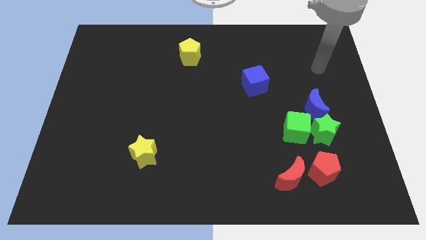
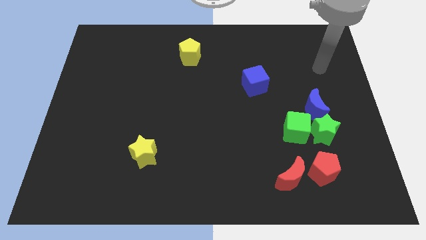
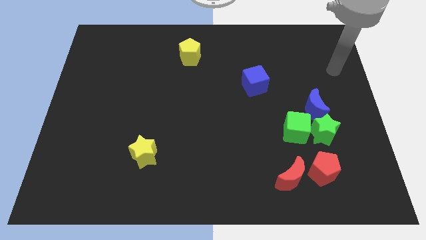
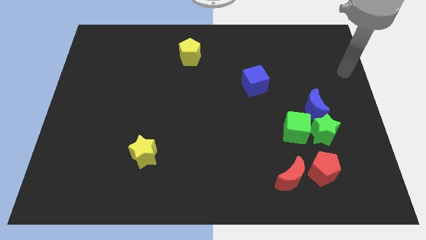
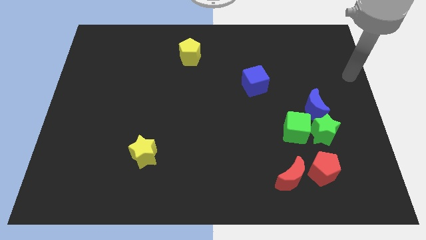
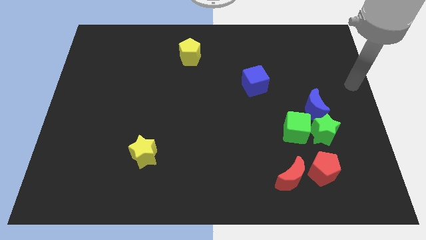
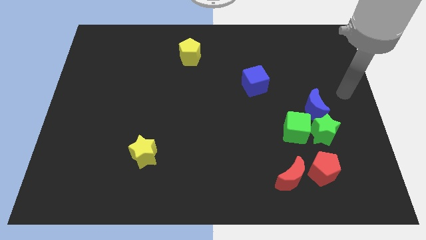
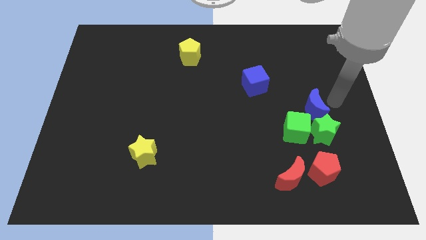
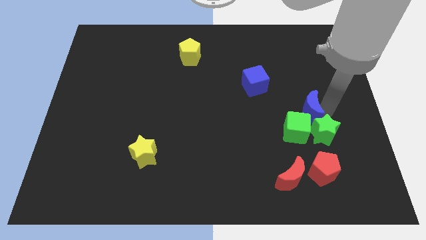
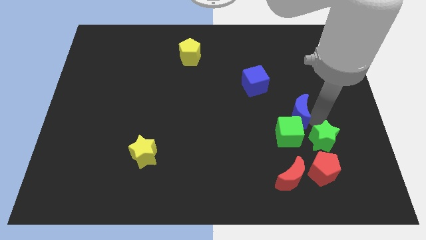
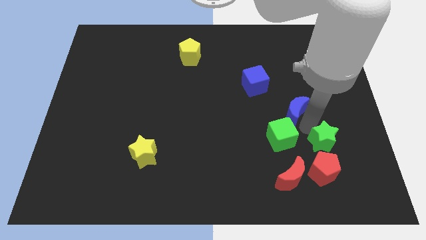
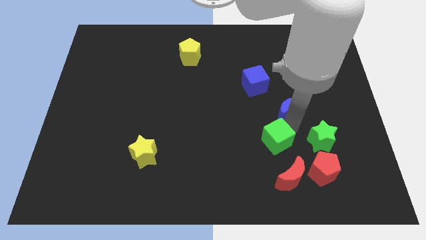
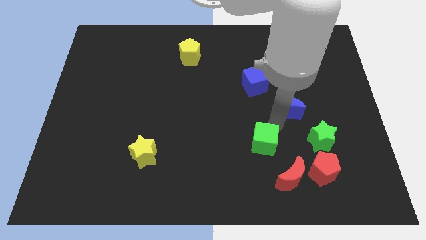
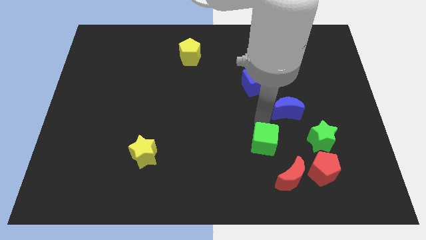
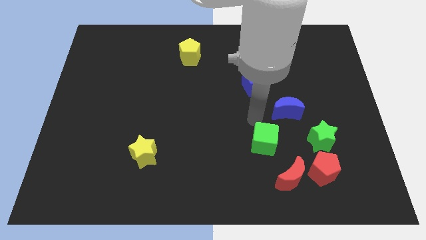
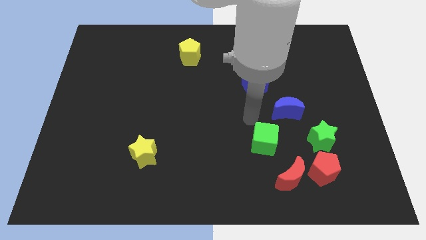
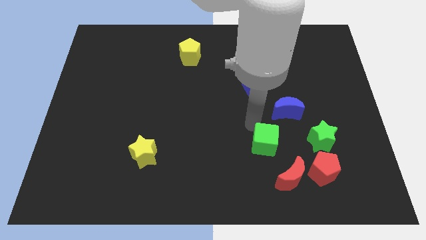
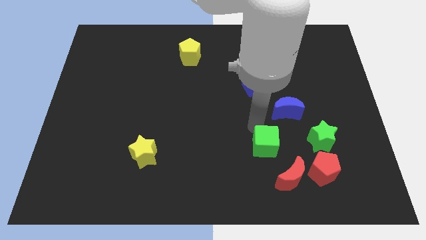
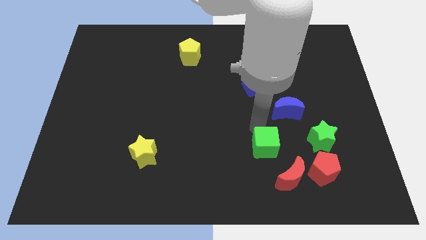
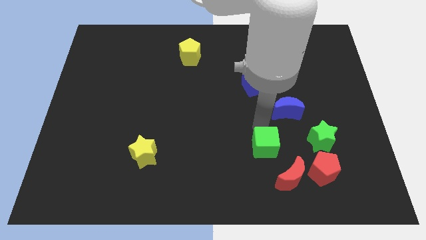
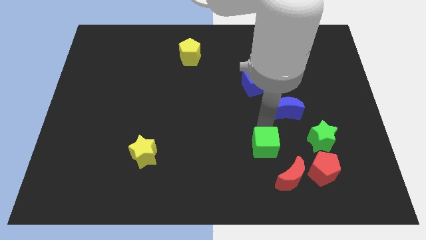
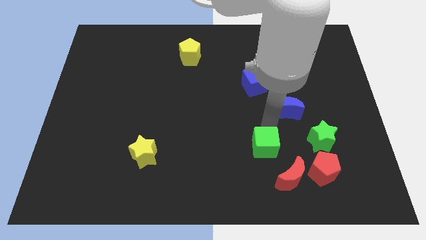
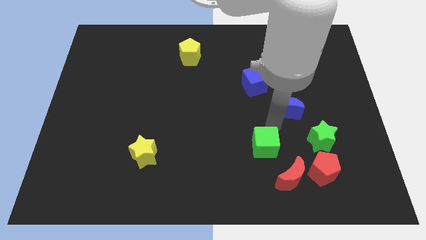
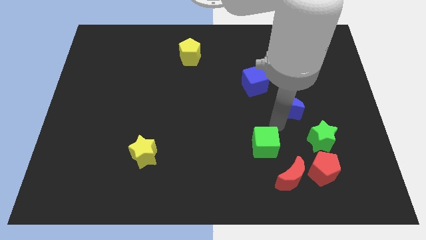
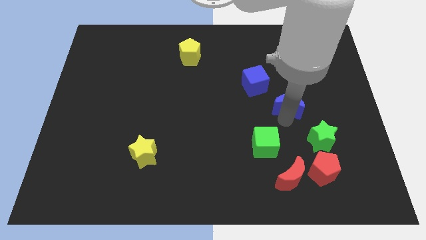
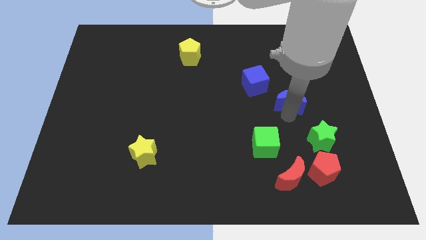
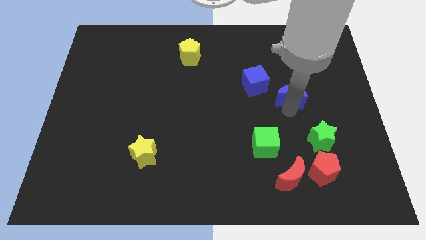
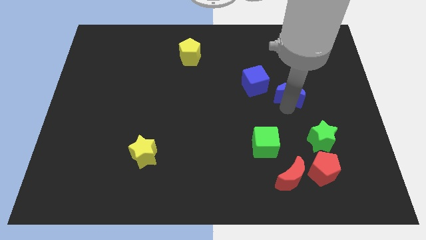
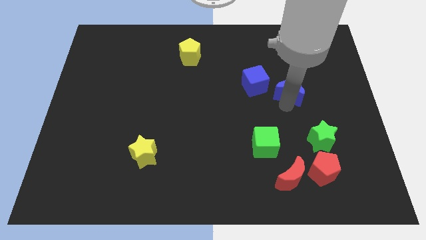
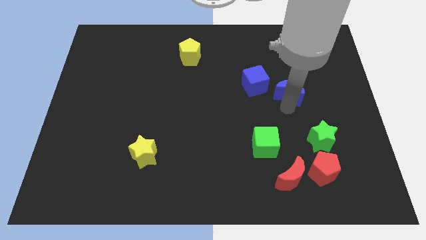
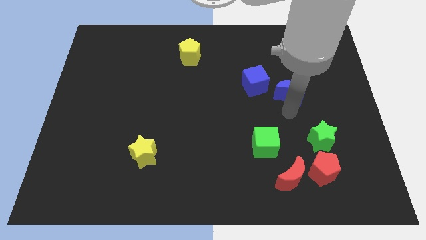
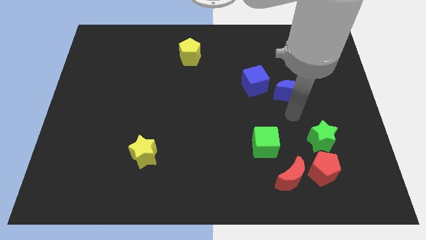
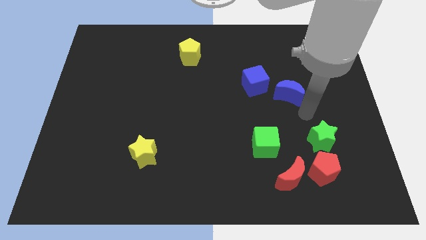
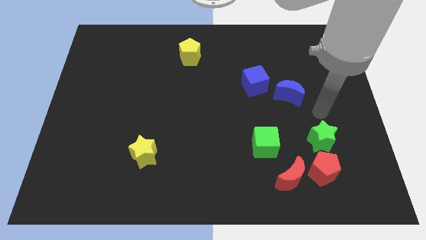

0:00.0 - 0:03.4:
move the blue crescent close to the blue cube

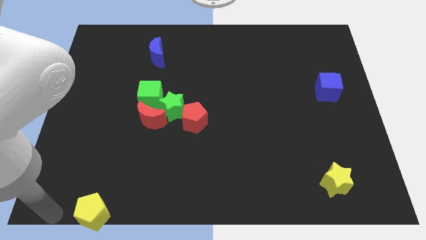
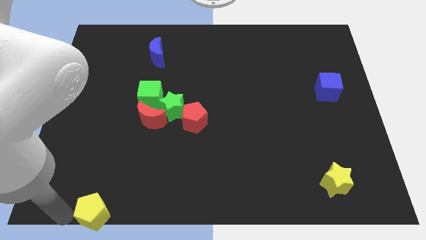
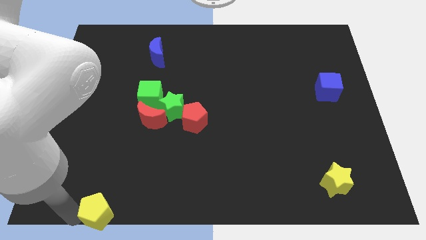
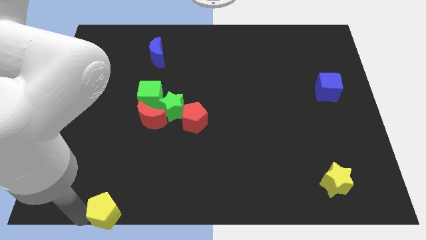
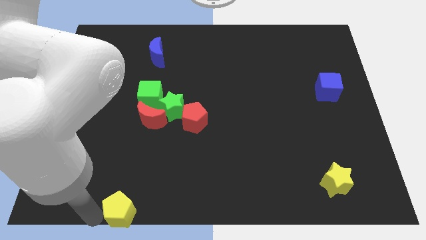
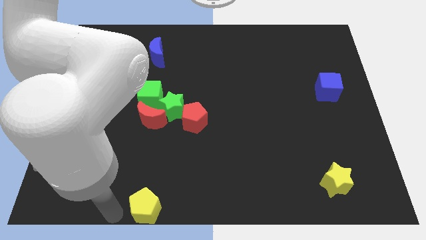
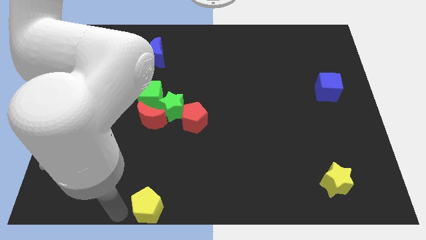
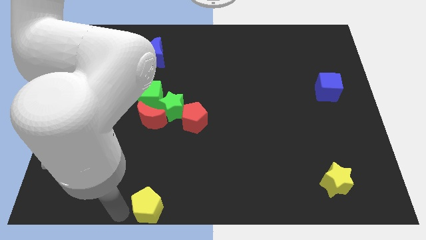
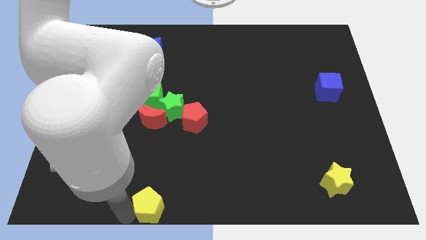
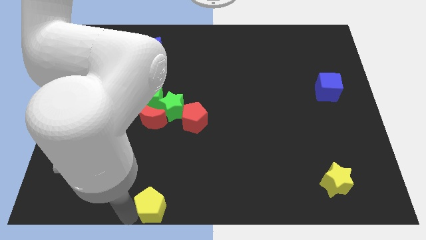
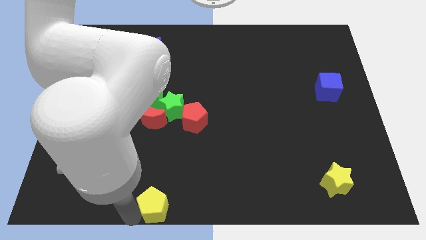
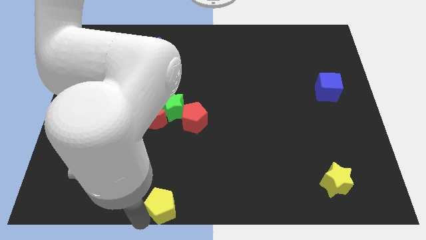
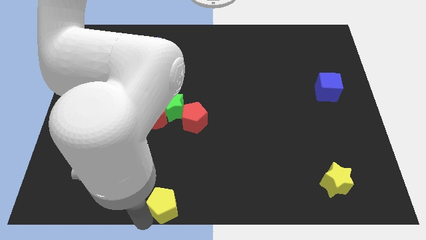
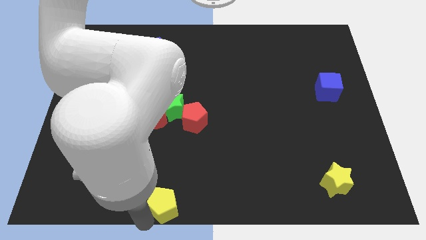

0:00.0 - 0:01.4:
push yellow pentagon to the right

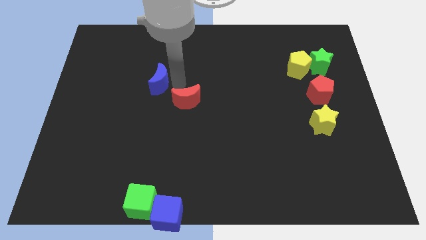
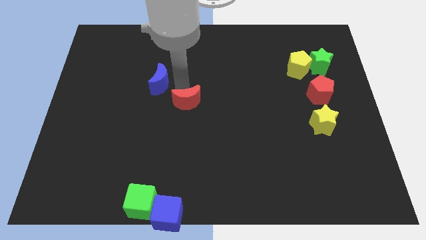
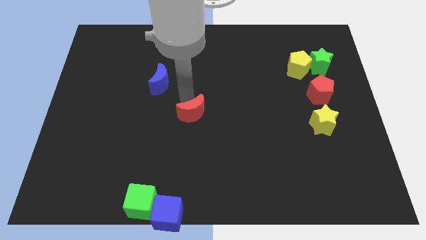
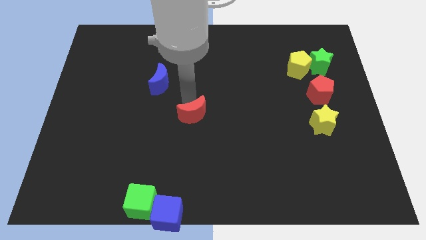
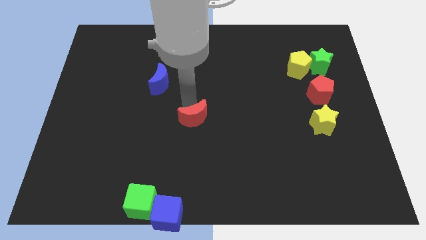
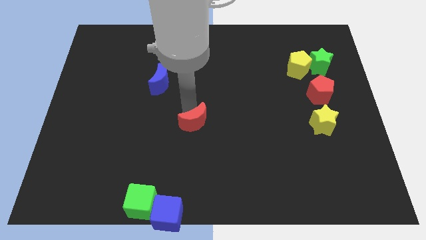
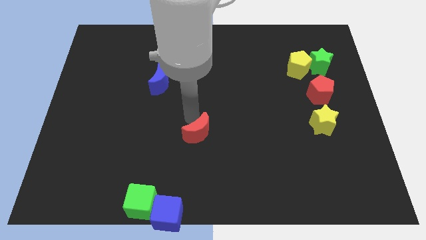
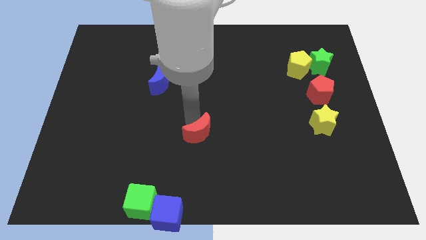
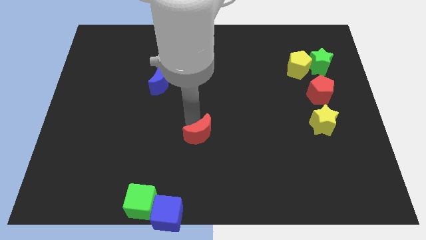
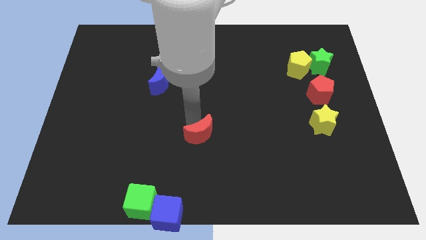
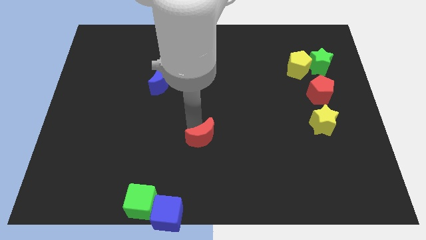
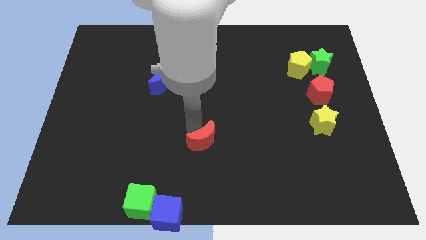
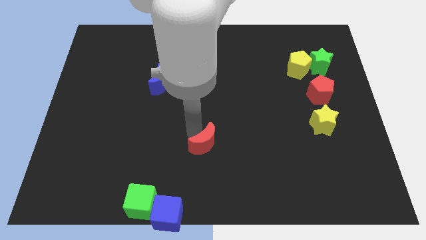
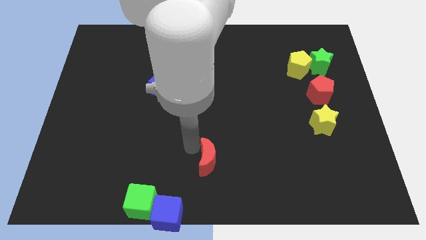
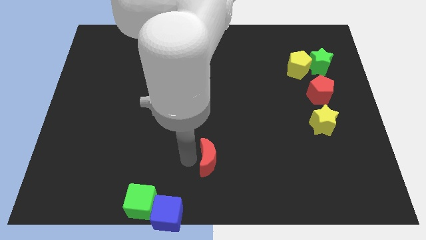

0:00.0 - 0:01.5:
push the red crescent towards the center bottom

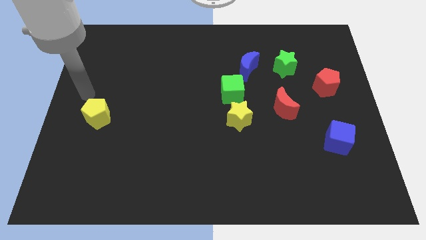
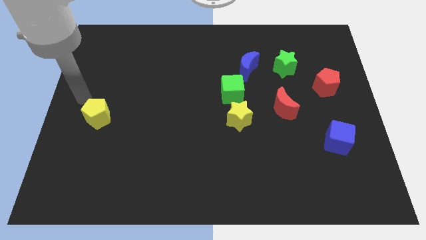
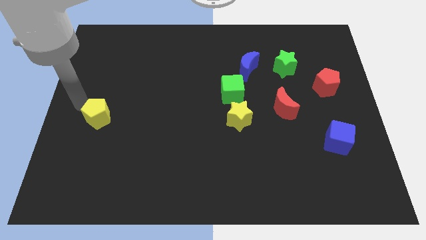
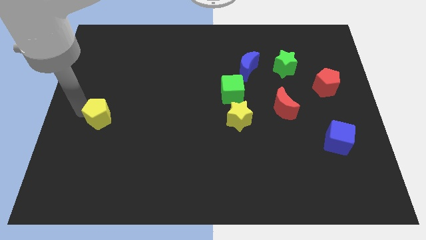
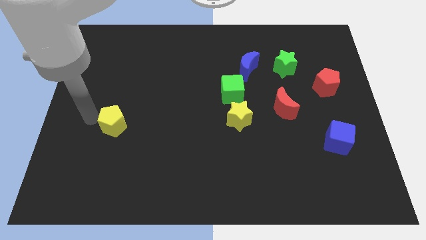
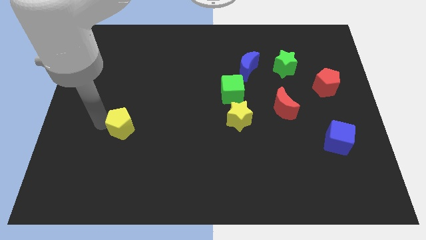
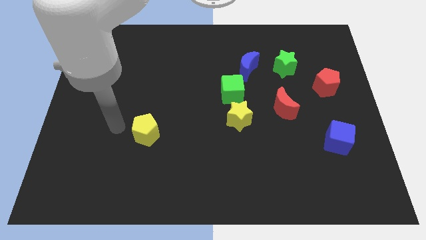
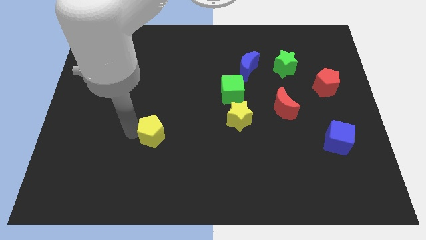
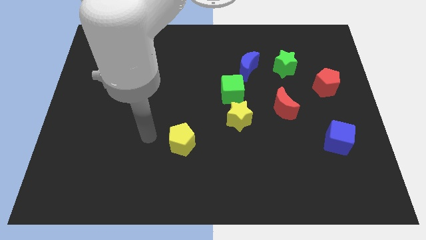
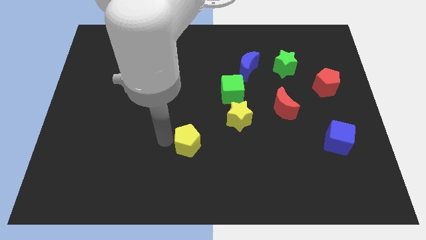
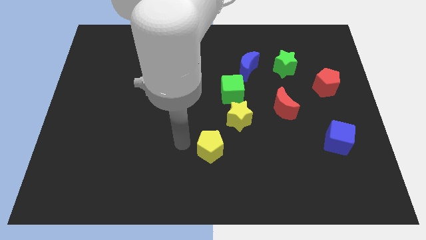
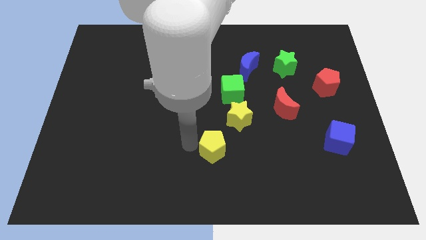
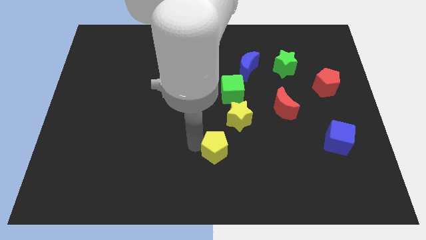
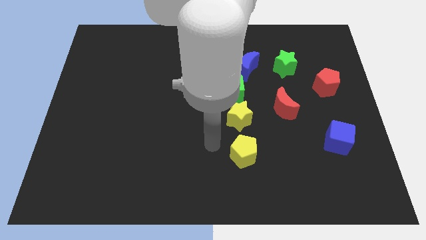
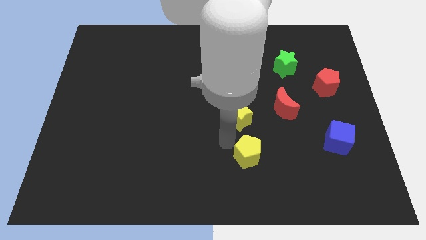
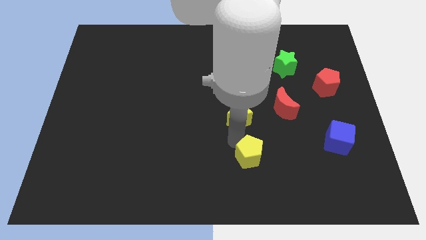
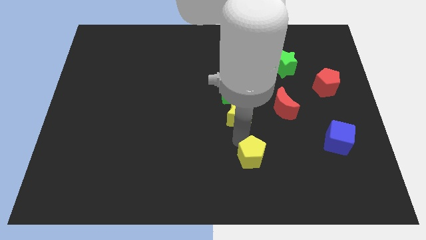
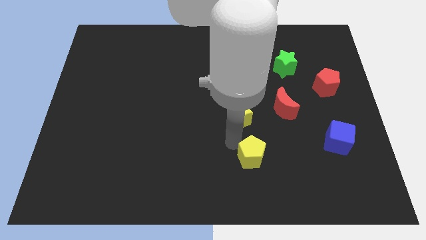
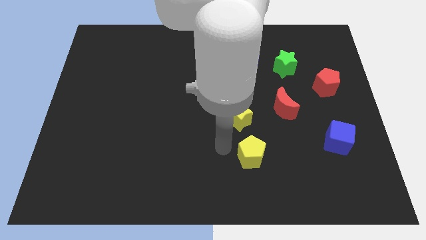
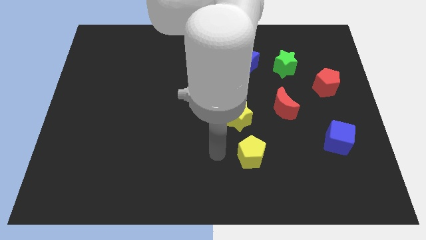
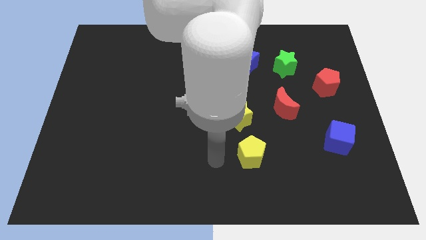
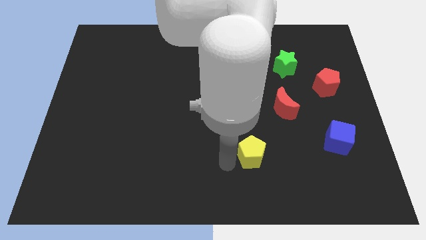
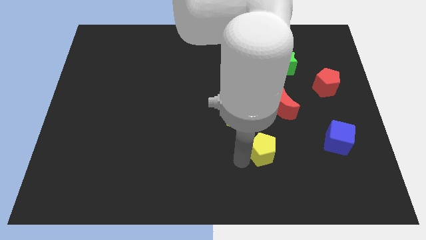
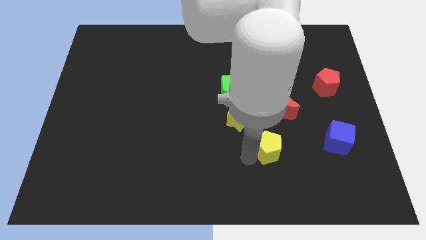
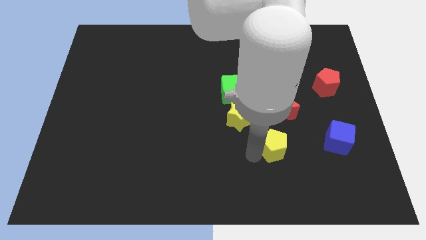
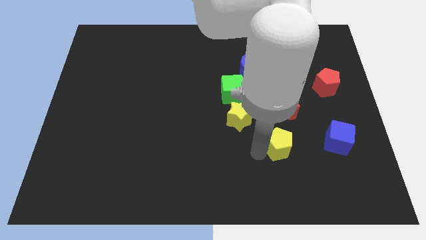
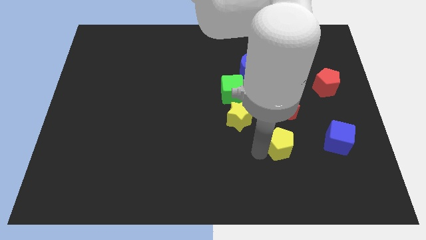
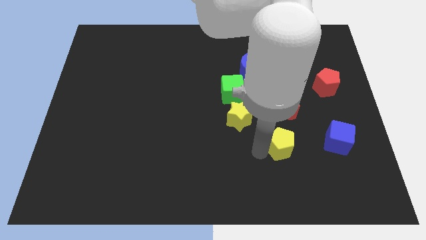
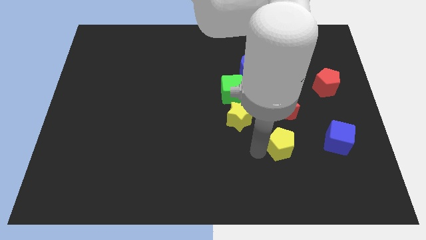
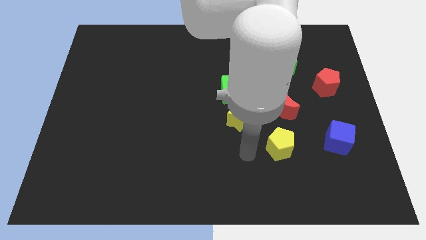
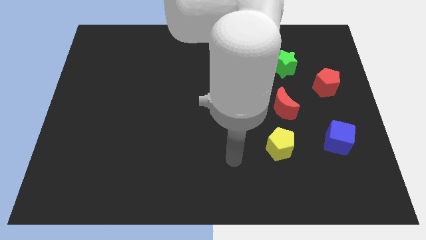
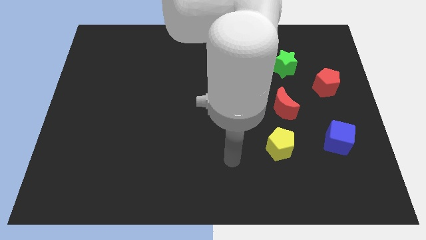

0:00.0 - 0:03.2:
place yellow pentagon to the bottom of red moon
